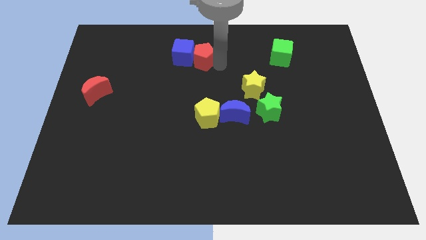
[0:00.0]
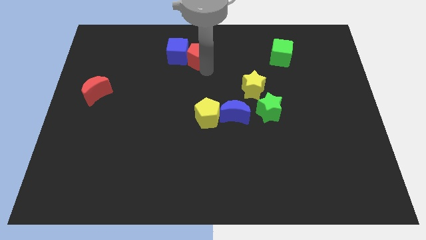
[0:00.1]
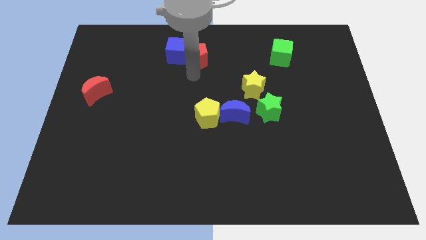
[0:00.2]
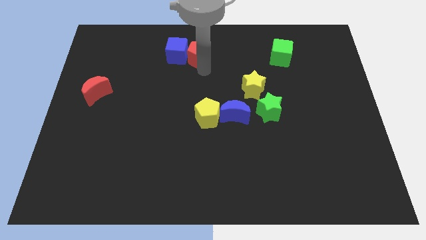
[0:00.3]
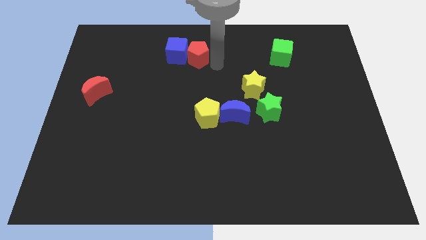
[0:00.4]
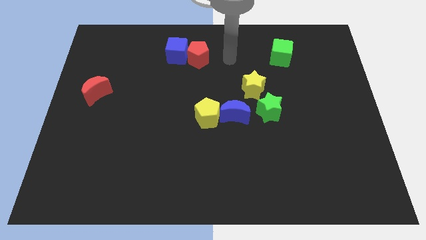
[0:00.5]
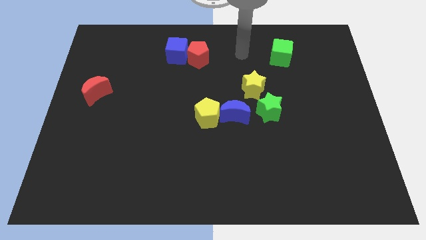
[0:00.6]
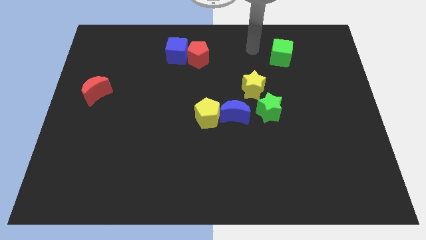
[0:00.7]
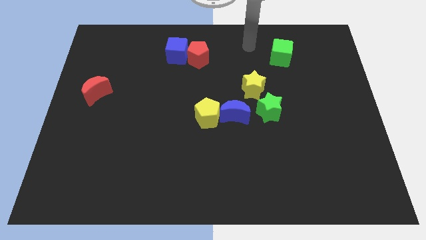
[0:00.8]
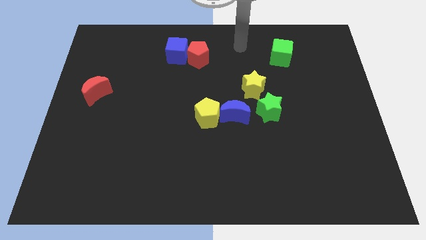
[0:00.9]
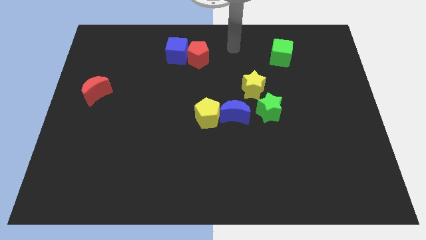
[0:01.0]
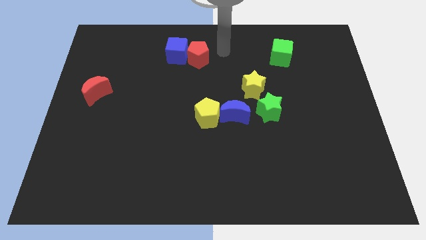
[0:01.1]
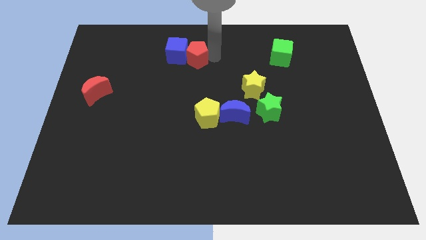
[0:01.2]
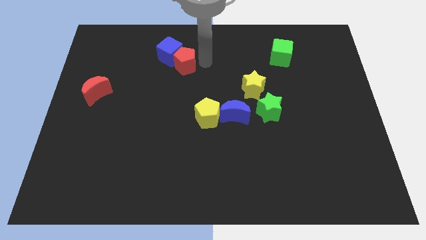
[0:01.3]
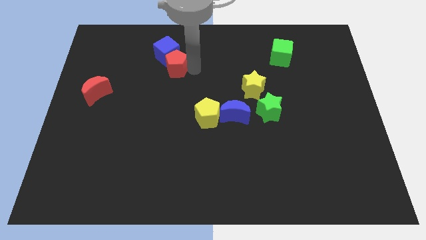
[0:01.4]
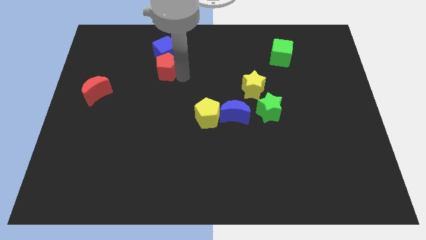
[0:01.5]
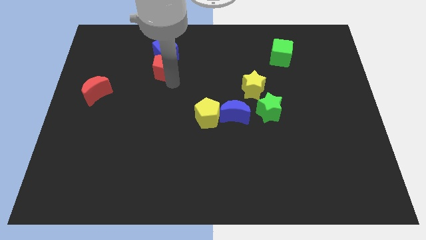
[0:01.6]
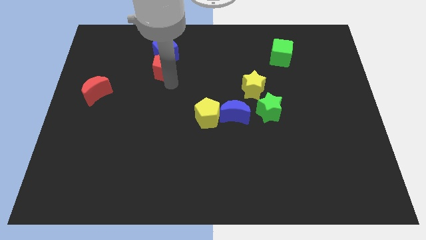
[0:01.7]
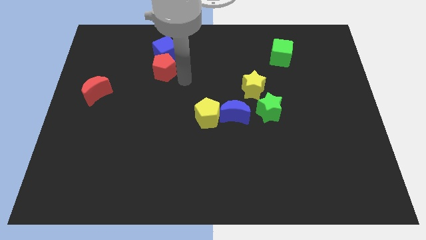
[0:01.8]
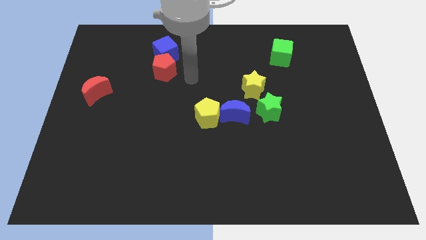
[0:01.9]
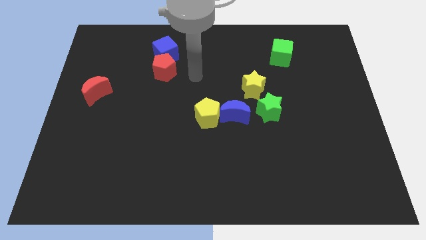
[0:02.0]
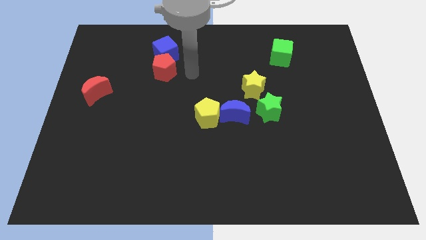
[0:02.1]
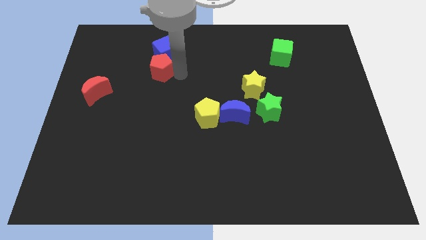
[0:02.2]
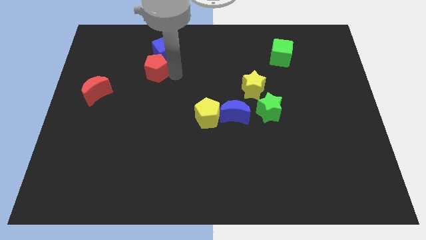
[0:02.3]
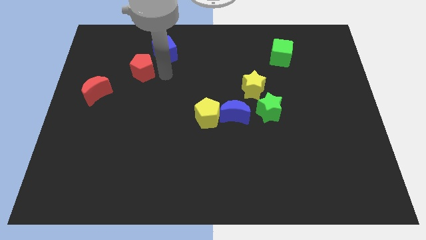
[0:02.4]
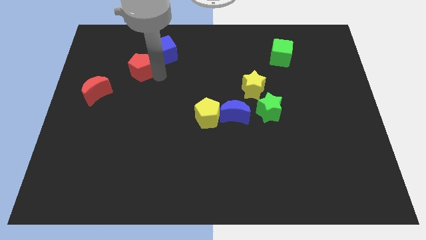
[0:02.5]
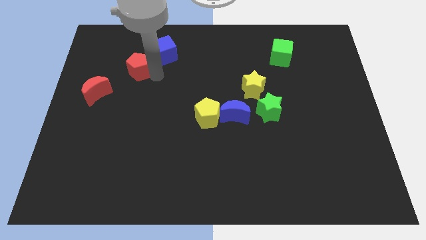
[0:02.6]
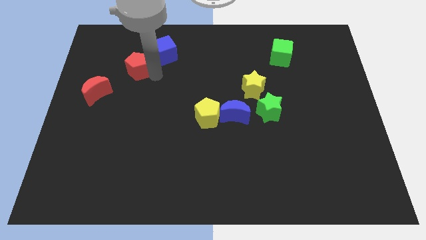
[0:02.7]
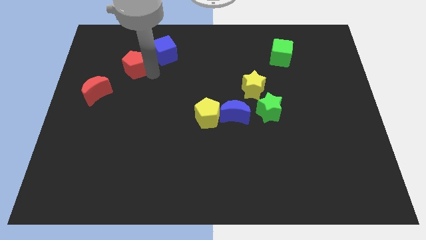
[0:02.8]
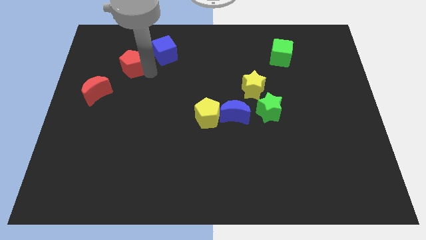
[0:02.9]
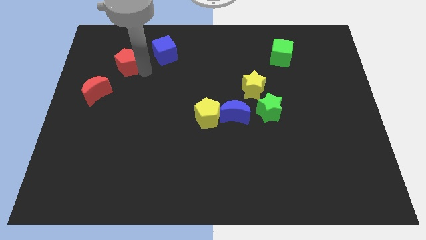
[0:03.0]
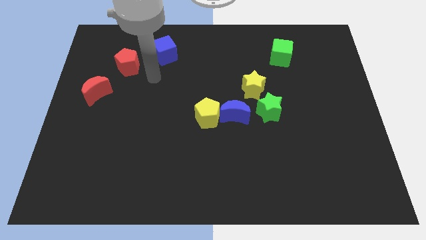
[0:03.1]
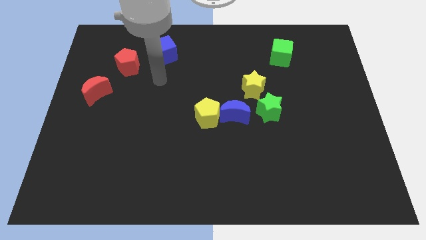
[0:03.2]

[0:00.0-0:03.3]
push the red pentagon to the left bottom side of the blue cube

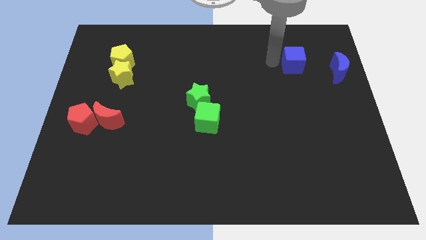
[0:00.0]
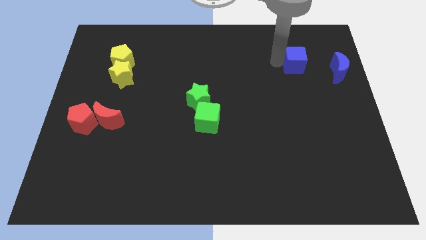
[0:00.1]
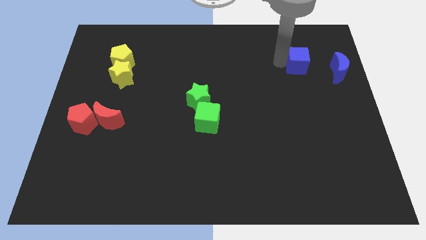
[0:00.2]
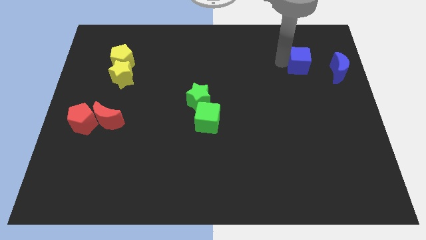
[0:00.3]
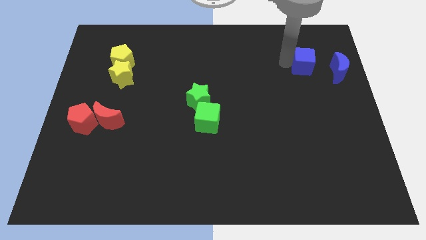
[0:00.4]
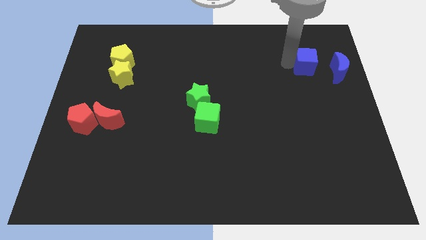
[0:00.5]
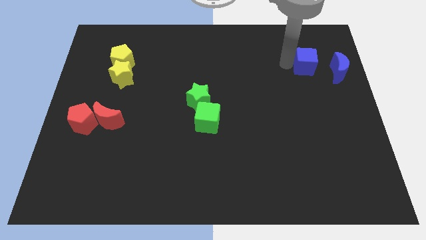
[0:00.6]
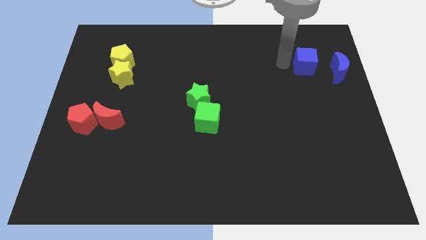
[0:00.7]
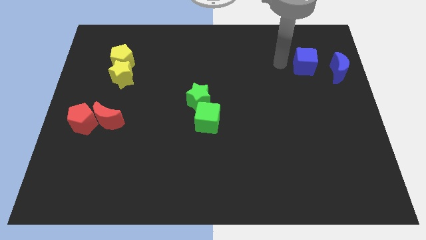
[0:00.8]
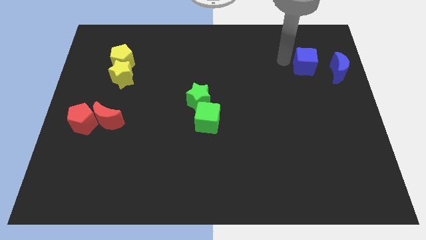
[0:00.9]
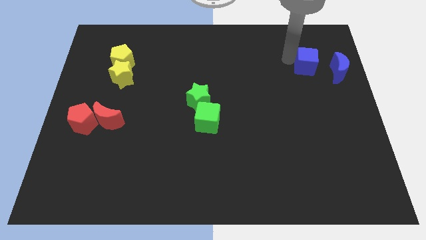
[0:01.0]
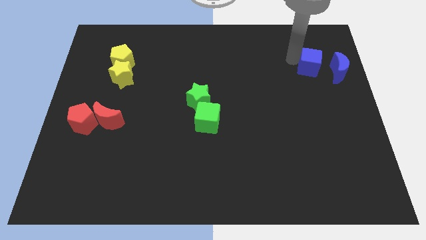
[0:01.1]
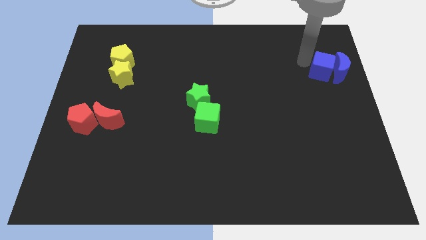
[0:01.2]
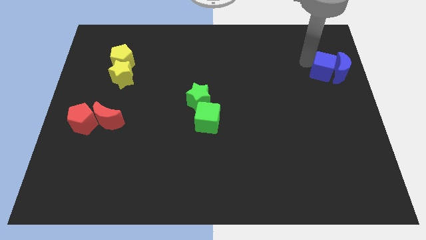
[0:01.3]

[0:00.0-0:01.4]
move blue cube into the blue moon

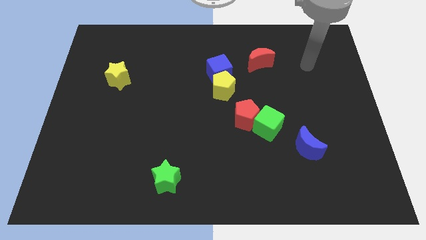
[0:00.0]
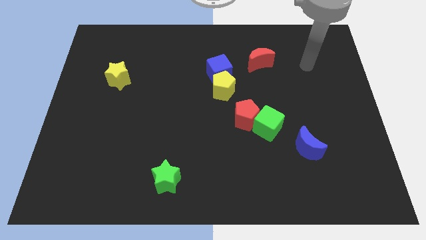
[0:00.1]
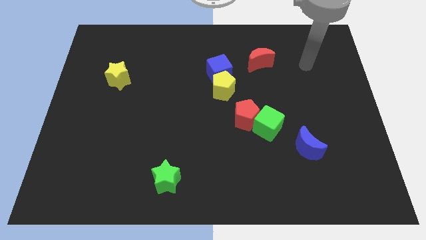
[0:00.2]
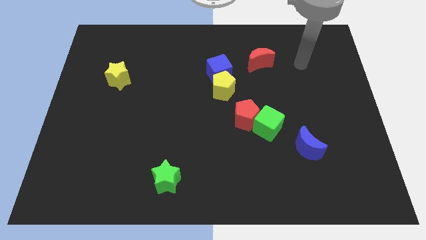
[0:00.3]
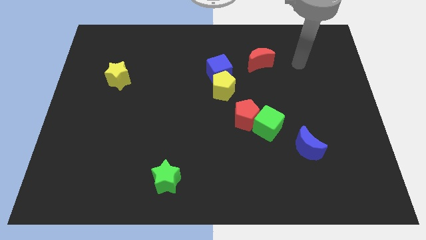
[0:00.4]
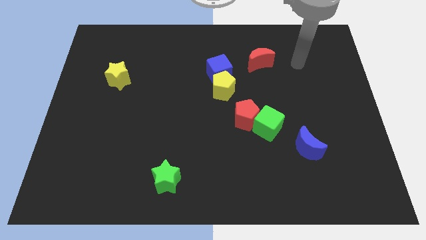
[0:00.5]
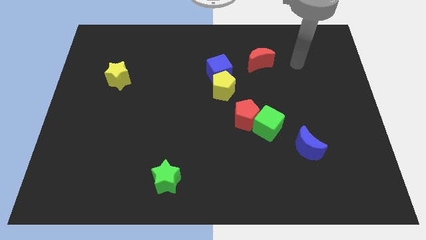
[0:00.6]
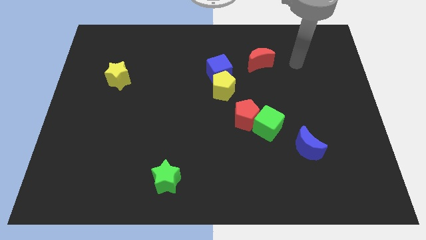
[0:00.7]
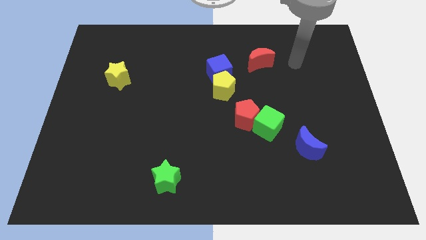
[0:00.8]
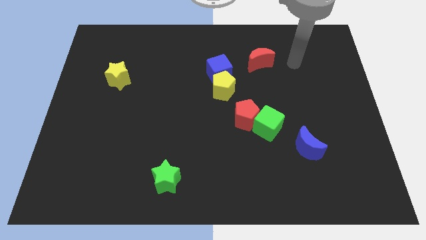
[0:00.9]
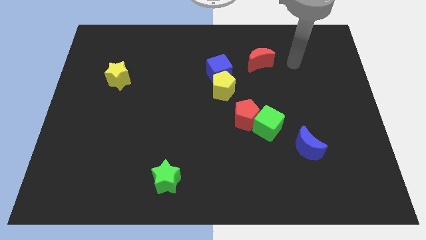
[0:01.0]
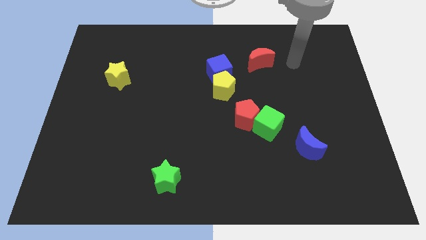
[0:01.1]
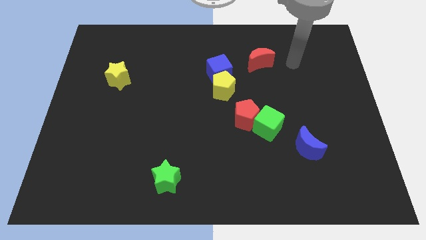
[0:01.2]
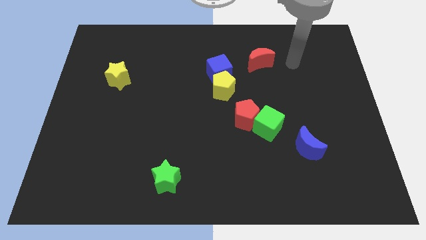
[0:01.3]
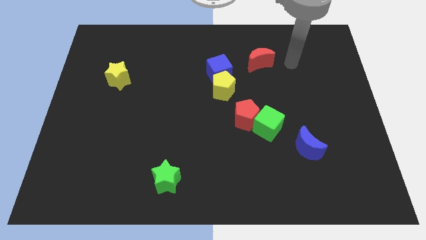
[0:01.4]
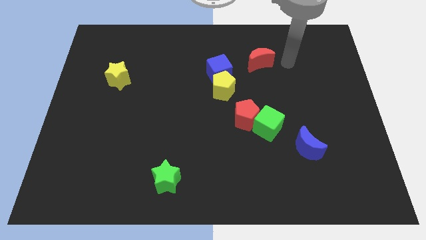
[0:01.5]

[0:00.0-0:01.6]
move your arm towards the red crescent

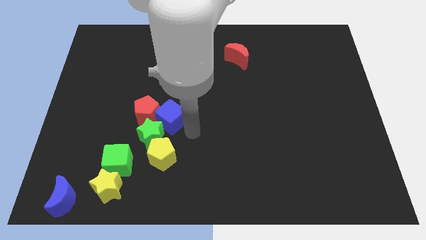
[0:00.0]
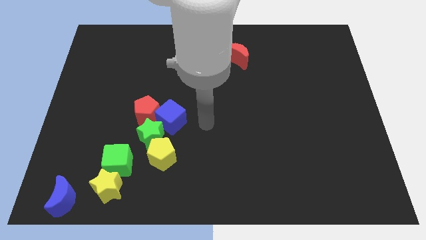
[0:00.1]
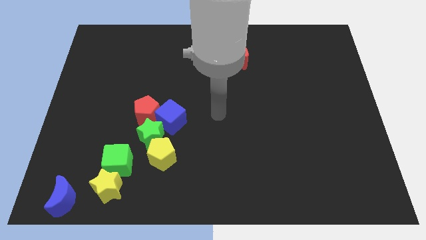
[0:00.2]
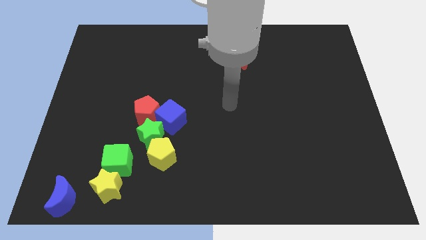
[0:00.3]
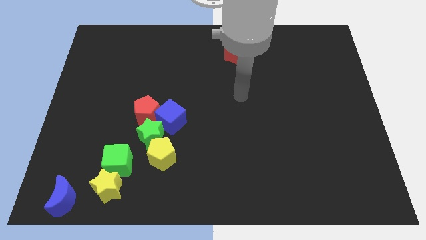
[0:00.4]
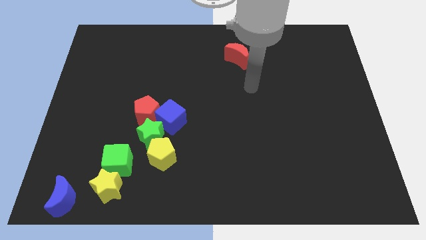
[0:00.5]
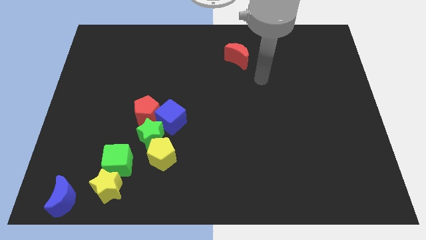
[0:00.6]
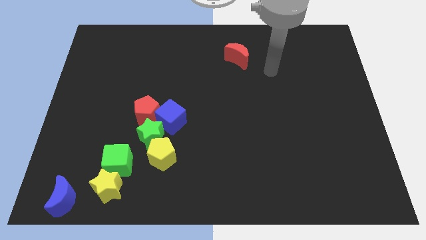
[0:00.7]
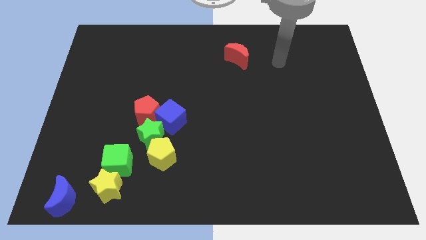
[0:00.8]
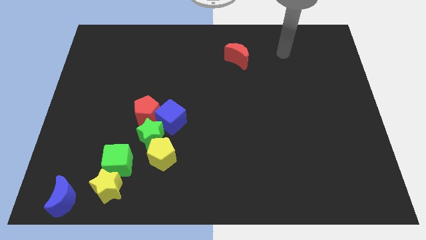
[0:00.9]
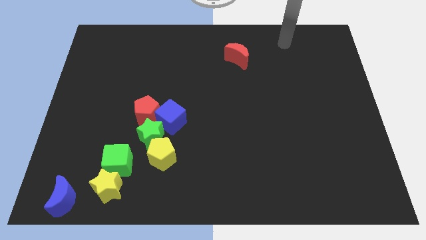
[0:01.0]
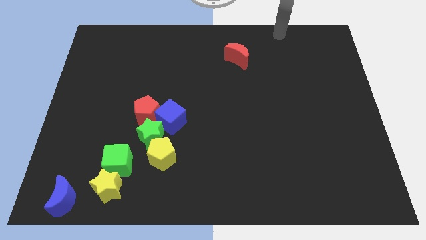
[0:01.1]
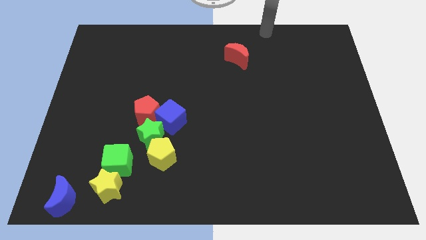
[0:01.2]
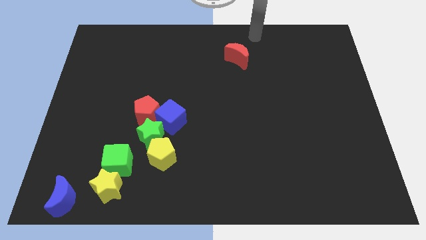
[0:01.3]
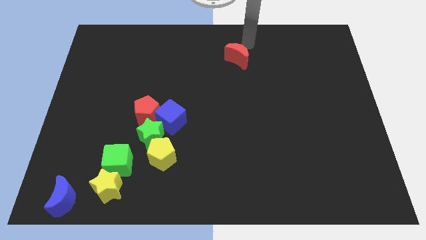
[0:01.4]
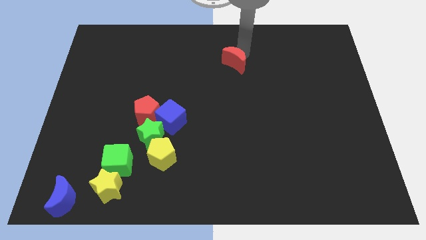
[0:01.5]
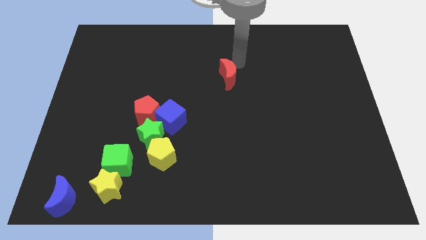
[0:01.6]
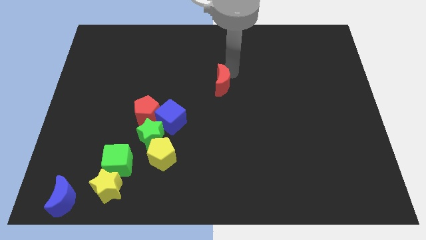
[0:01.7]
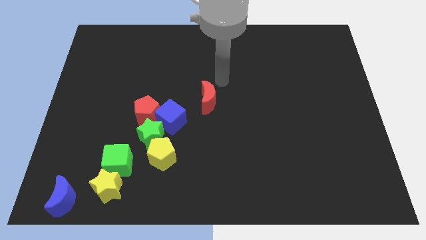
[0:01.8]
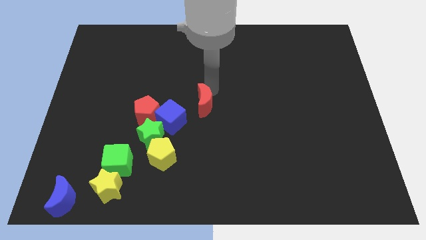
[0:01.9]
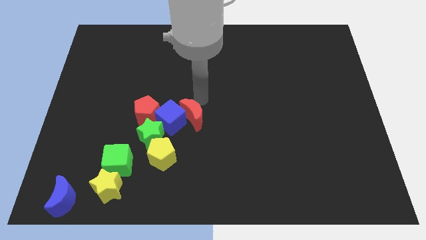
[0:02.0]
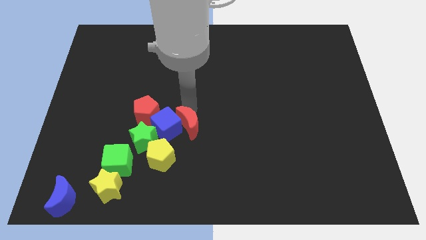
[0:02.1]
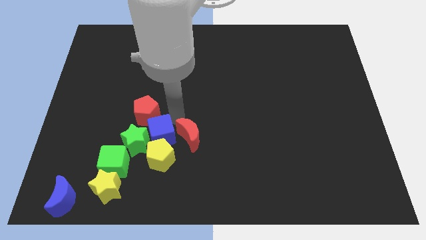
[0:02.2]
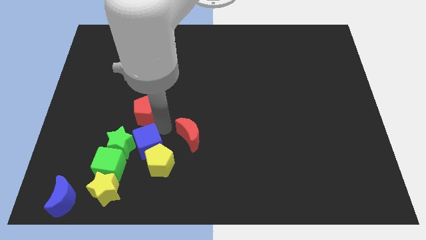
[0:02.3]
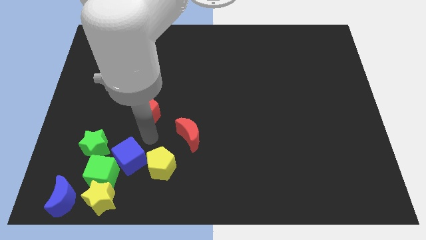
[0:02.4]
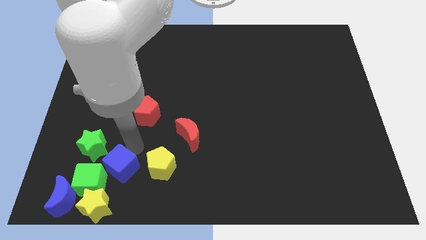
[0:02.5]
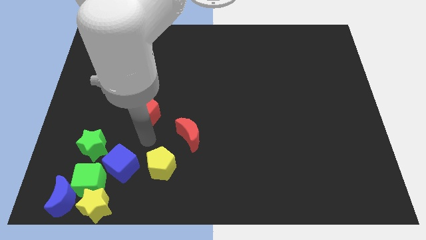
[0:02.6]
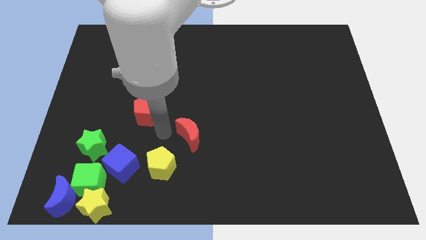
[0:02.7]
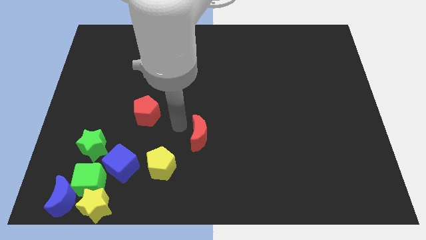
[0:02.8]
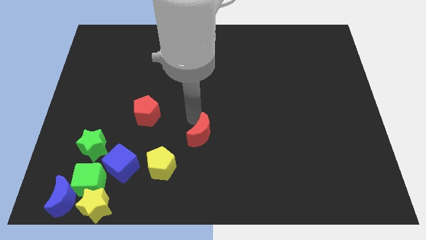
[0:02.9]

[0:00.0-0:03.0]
move red crescent to the right of blue cube
